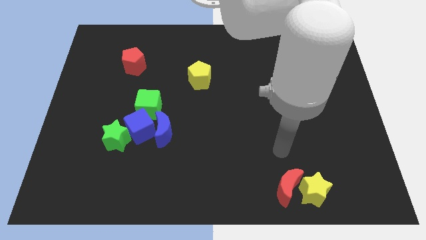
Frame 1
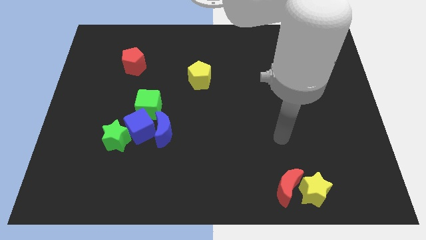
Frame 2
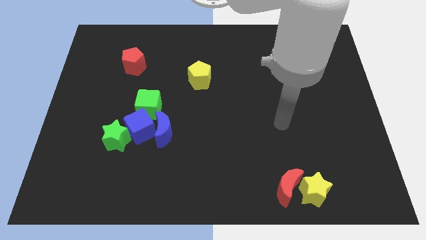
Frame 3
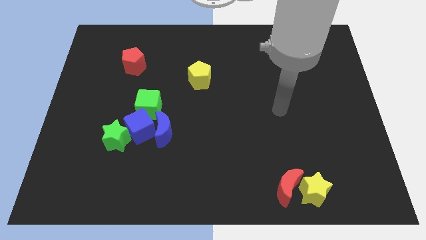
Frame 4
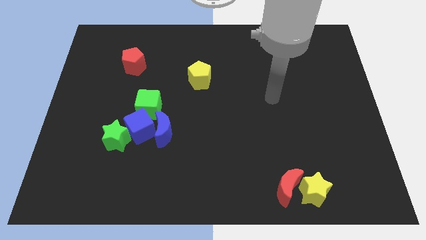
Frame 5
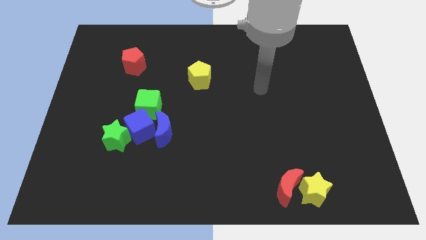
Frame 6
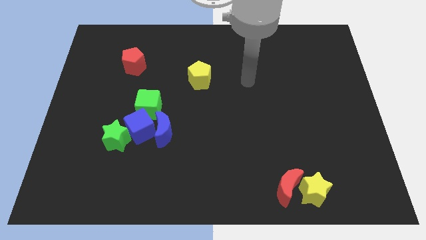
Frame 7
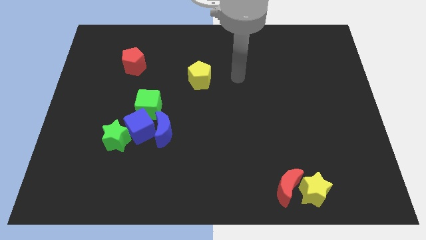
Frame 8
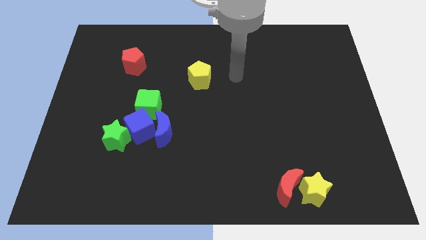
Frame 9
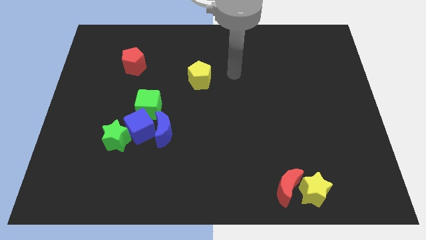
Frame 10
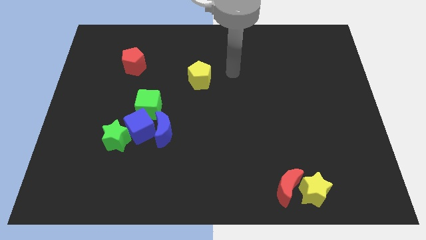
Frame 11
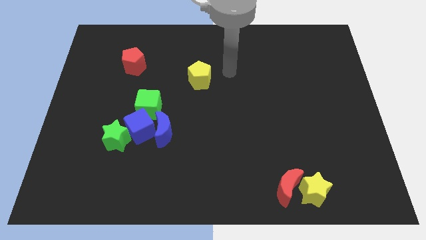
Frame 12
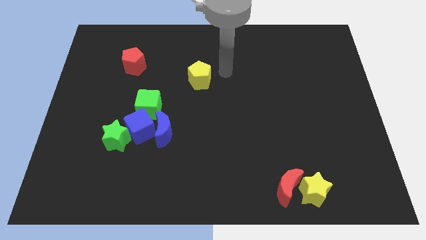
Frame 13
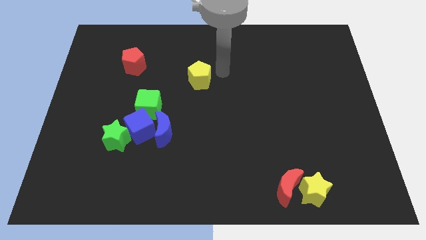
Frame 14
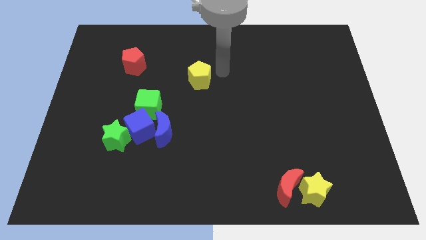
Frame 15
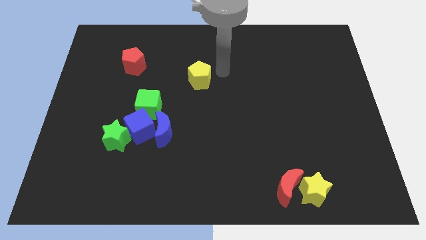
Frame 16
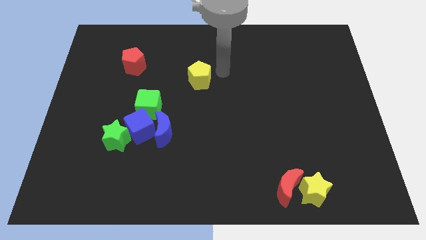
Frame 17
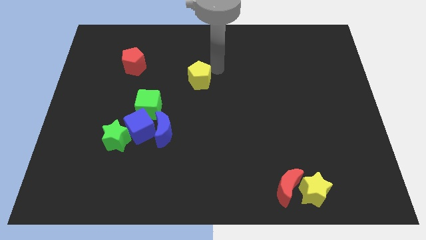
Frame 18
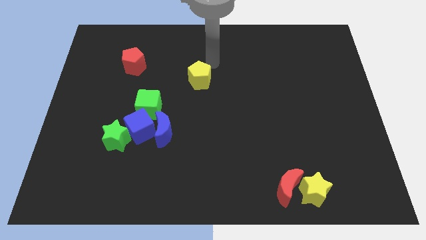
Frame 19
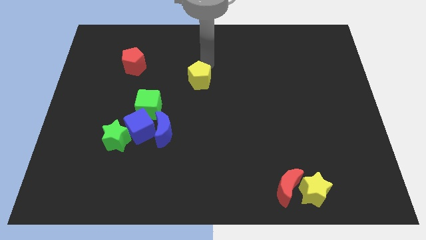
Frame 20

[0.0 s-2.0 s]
move your arm to the top of the yellow pentagon

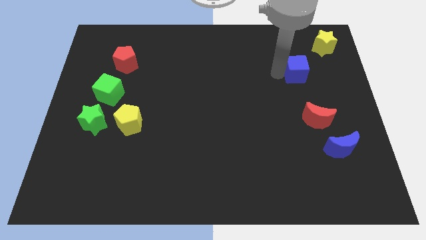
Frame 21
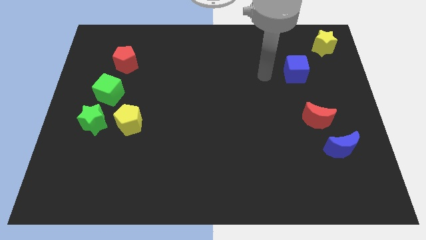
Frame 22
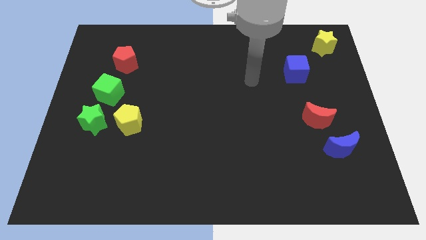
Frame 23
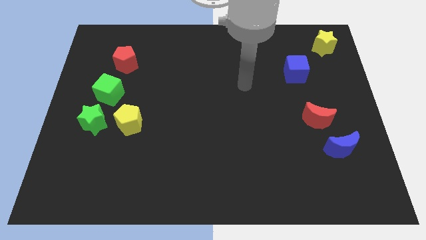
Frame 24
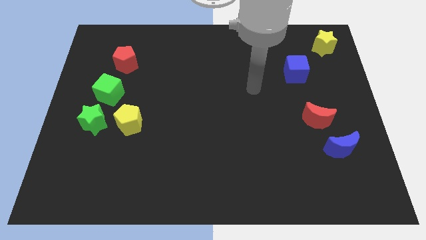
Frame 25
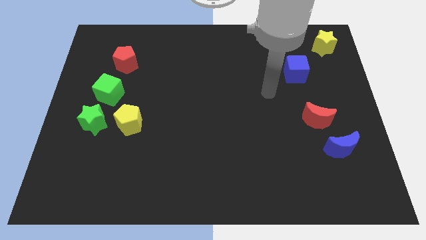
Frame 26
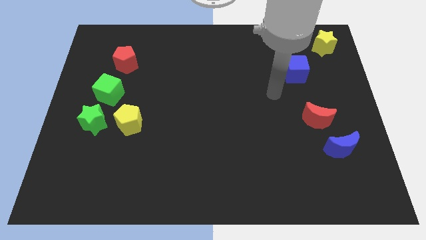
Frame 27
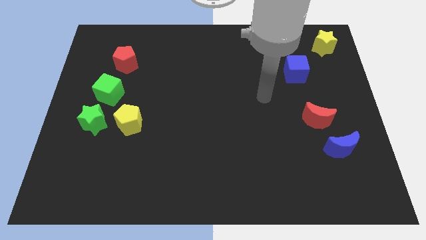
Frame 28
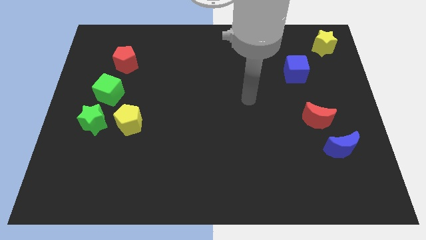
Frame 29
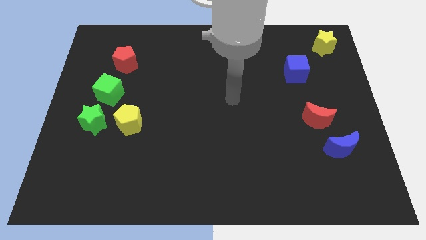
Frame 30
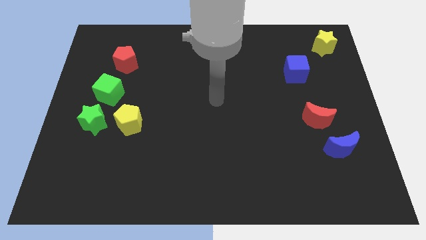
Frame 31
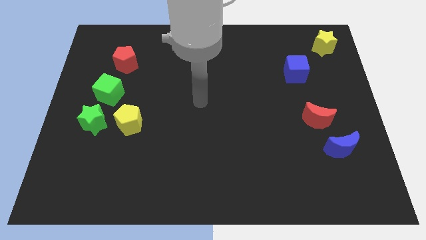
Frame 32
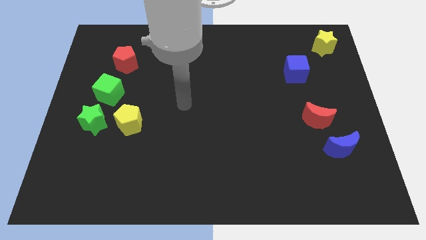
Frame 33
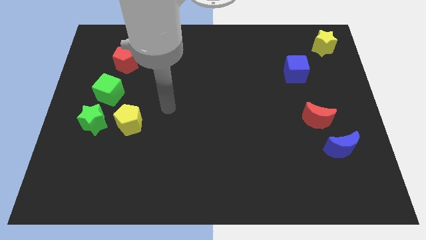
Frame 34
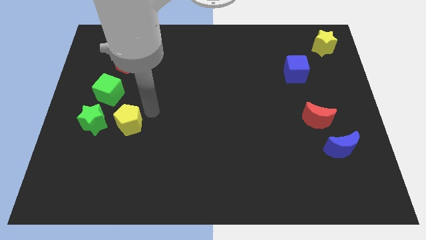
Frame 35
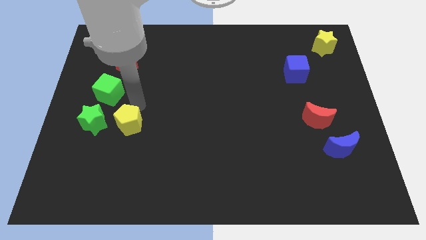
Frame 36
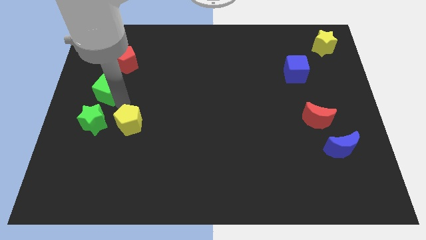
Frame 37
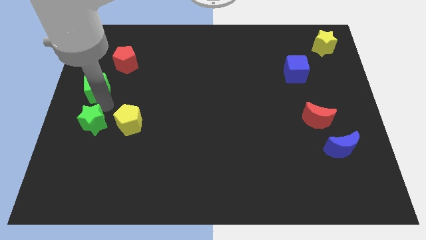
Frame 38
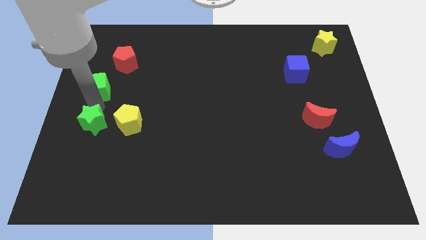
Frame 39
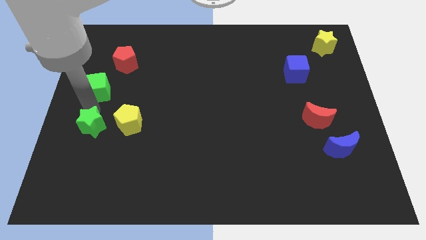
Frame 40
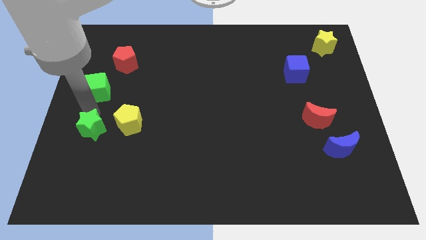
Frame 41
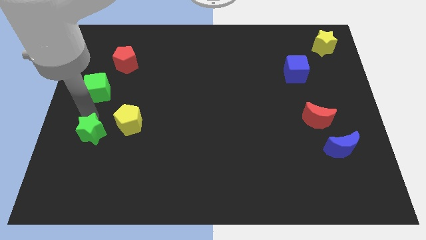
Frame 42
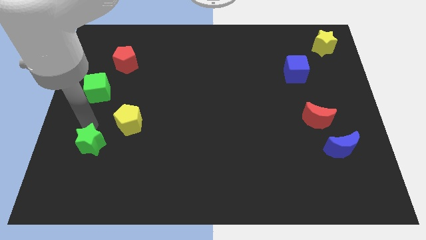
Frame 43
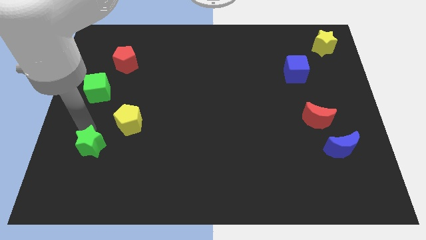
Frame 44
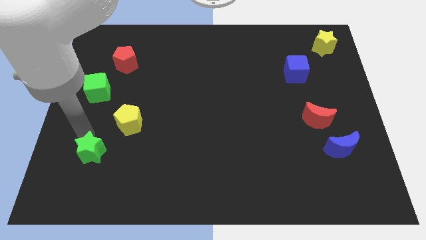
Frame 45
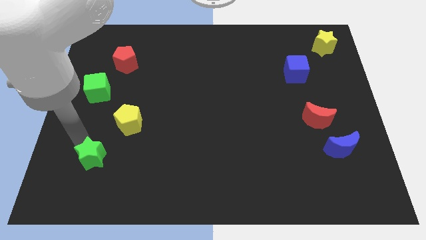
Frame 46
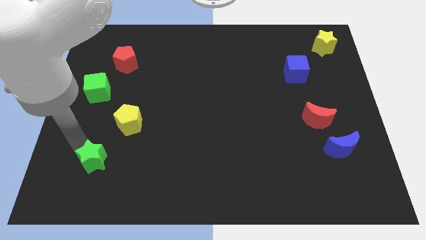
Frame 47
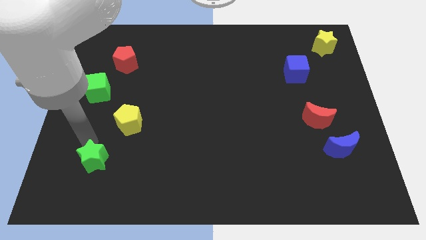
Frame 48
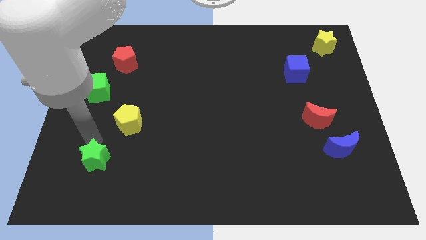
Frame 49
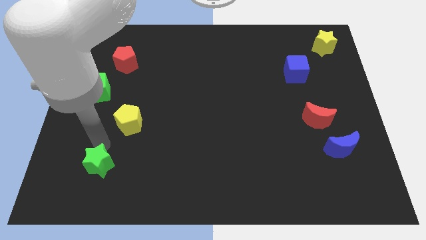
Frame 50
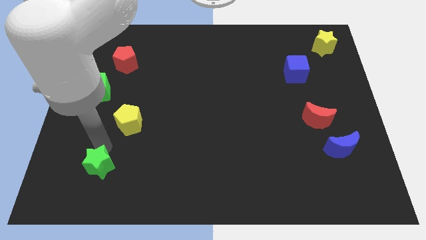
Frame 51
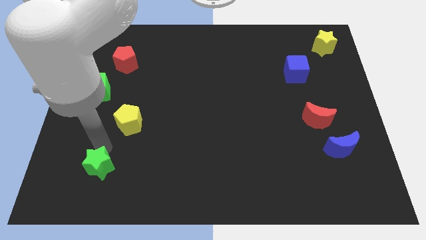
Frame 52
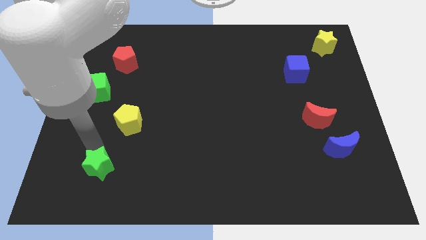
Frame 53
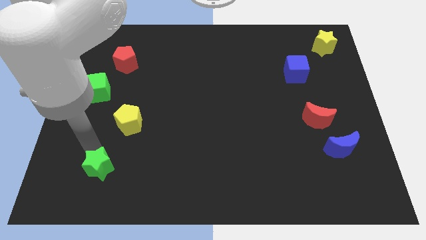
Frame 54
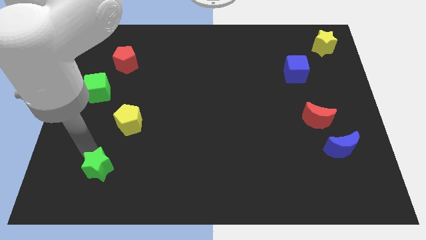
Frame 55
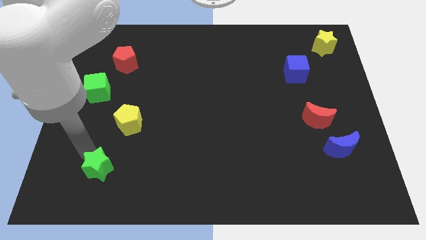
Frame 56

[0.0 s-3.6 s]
push the green star towards the bottom of the board

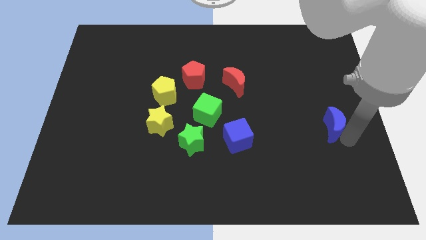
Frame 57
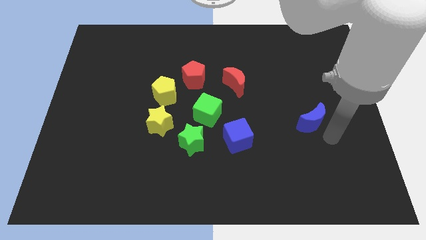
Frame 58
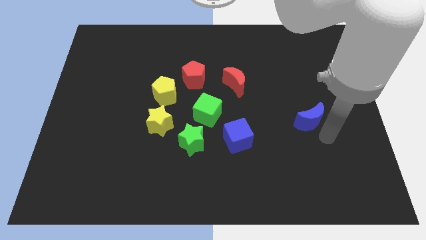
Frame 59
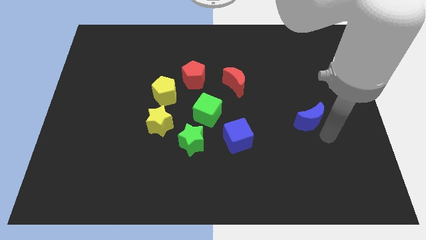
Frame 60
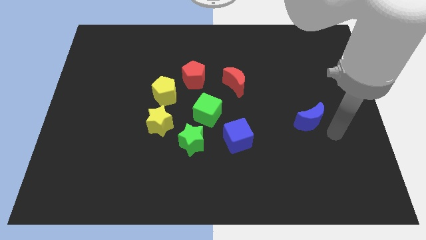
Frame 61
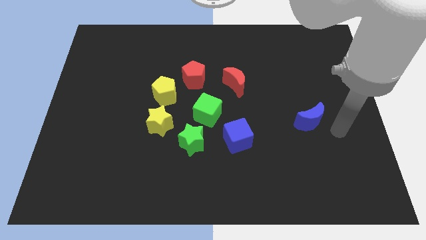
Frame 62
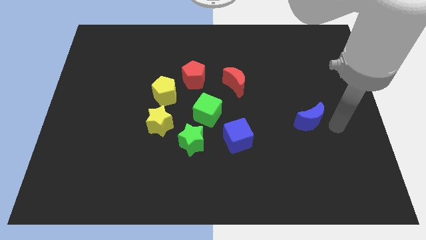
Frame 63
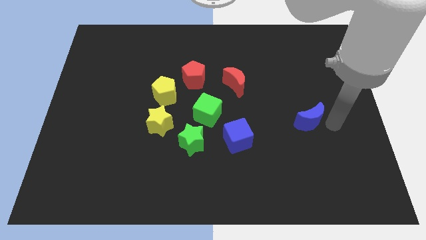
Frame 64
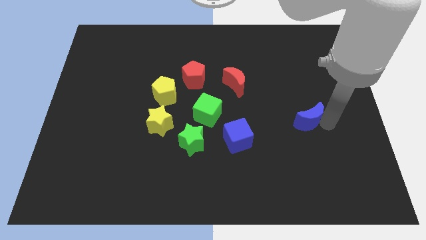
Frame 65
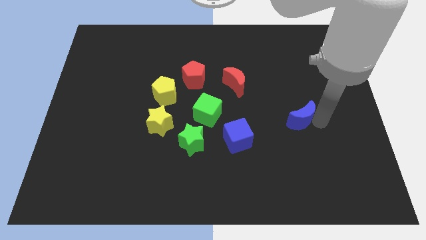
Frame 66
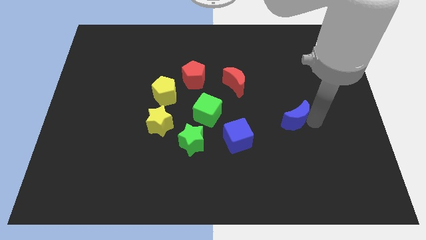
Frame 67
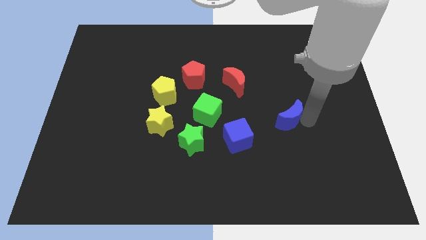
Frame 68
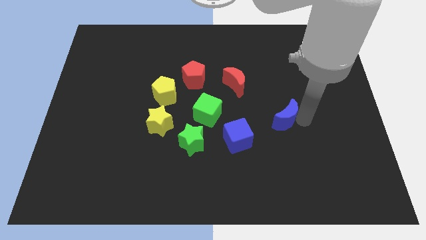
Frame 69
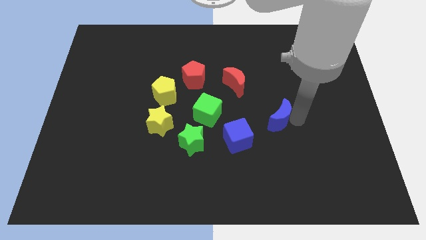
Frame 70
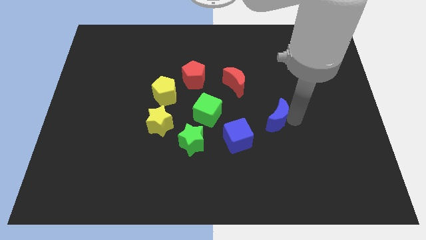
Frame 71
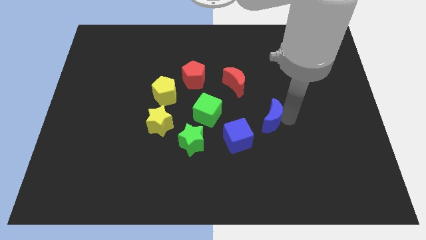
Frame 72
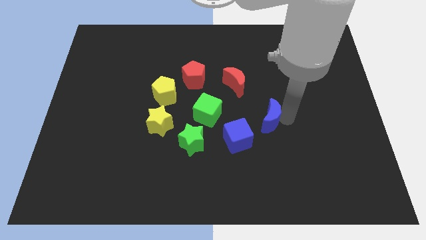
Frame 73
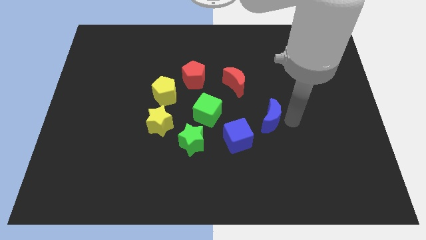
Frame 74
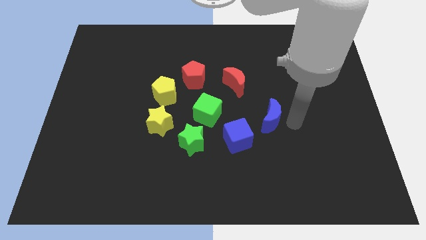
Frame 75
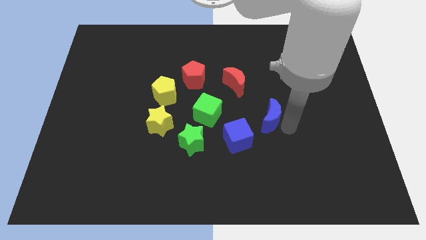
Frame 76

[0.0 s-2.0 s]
place the blue moon to the right side of the blue cube

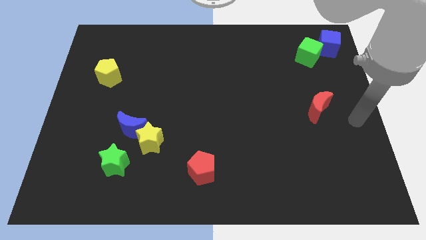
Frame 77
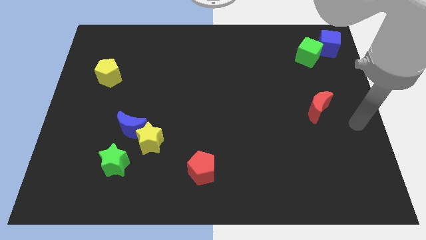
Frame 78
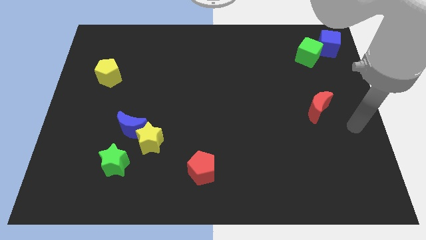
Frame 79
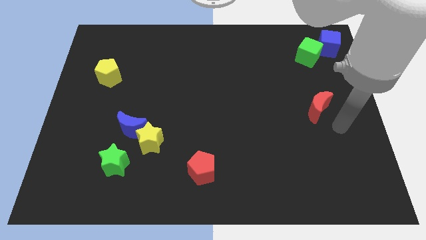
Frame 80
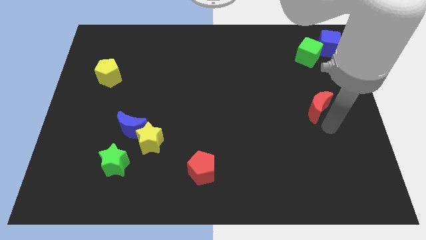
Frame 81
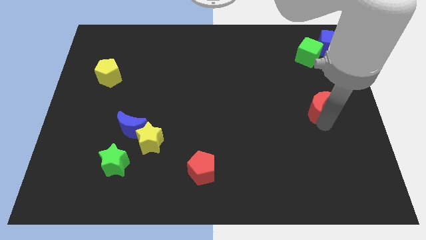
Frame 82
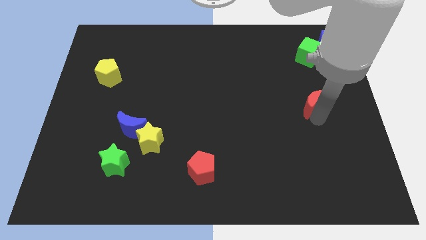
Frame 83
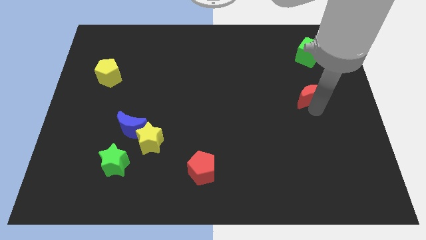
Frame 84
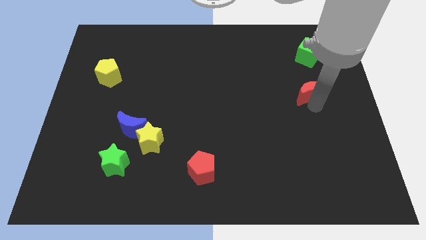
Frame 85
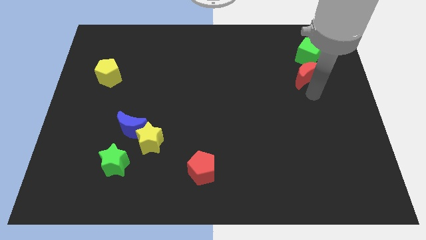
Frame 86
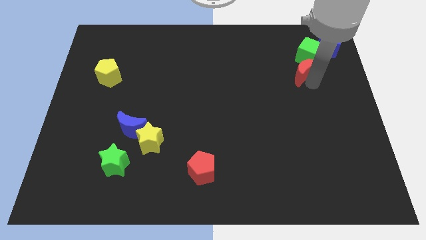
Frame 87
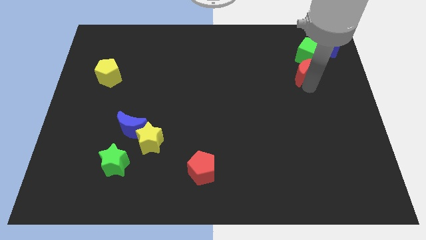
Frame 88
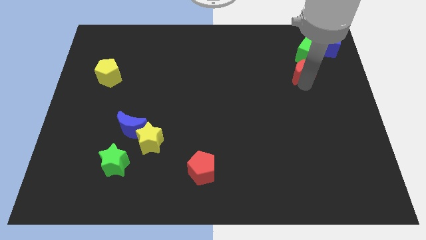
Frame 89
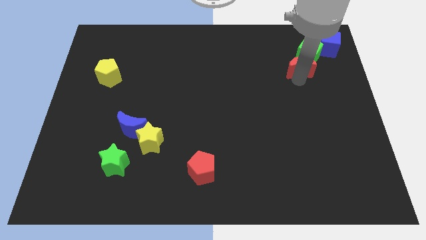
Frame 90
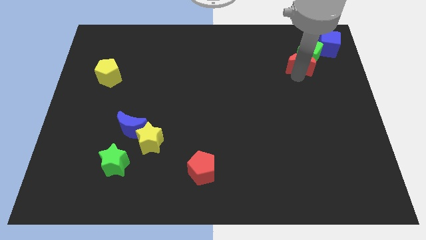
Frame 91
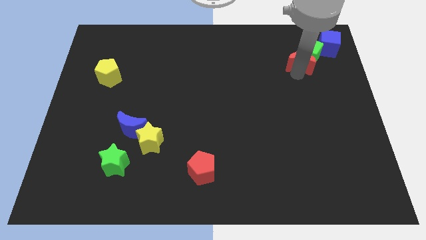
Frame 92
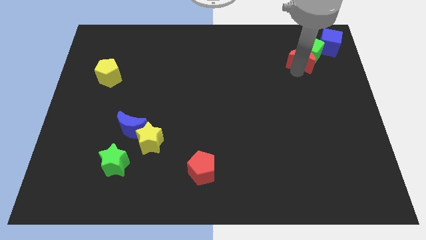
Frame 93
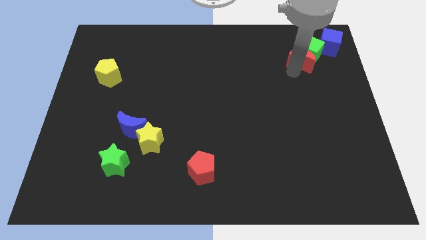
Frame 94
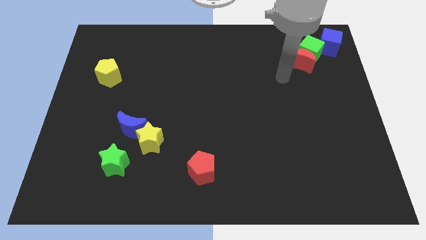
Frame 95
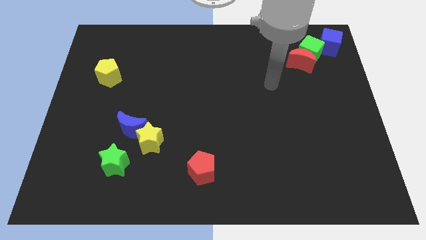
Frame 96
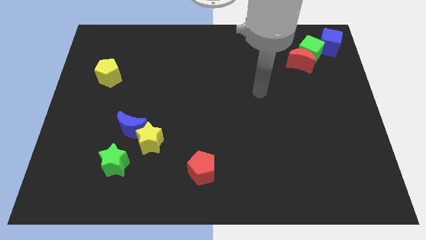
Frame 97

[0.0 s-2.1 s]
place the red crescent to the bottom of the green cube
